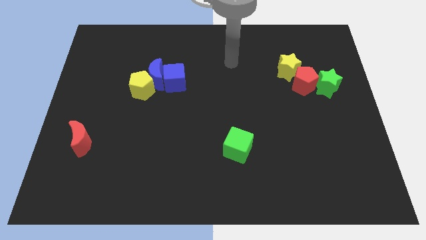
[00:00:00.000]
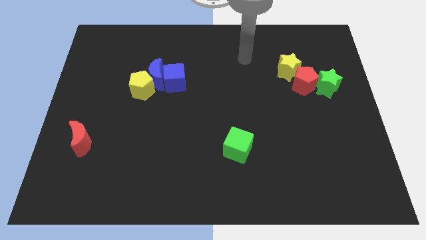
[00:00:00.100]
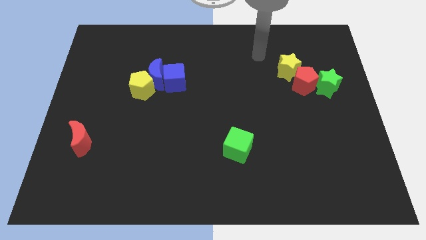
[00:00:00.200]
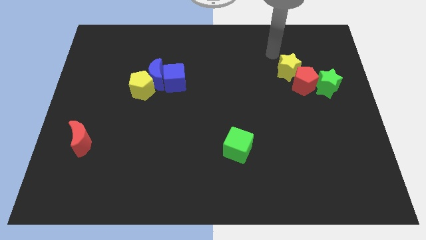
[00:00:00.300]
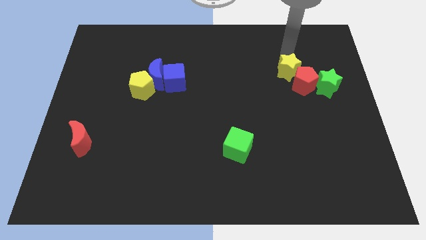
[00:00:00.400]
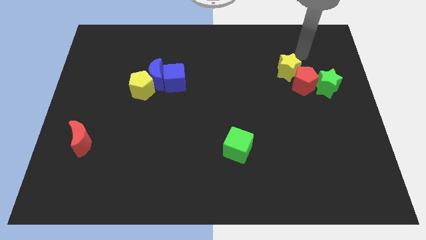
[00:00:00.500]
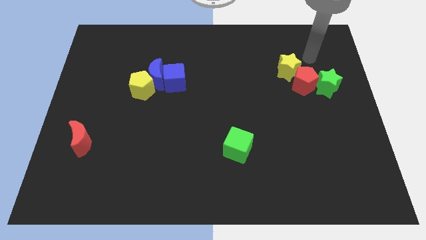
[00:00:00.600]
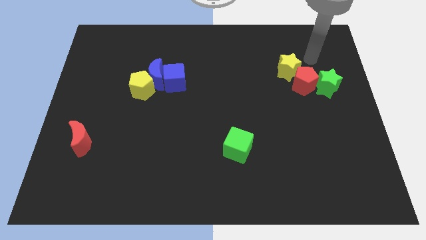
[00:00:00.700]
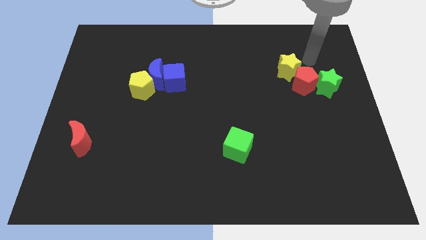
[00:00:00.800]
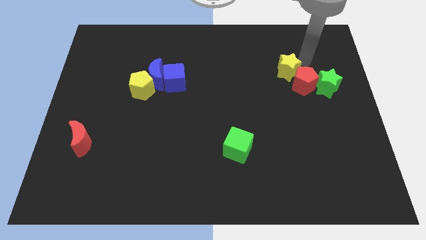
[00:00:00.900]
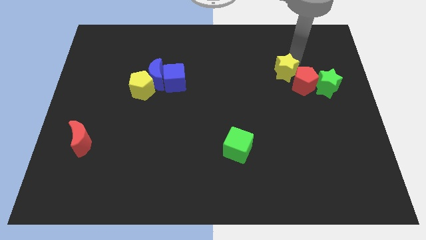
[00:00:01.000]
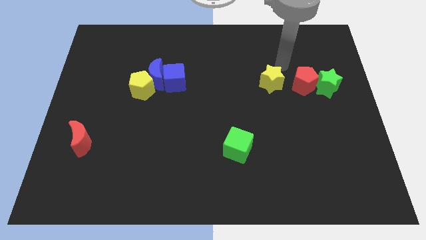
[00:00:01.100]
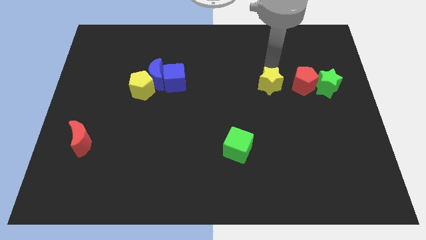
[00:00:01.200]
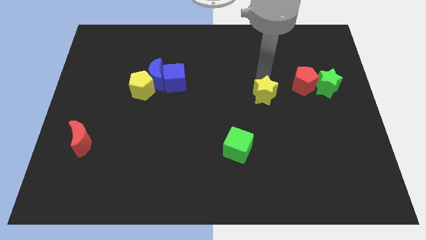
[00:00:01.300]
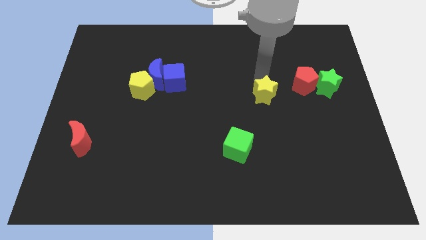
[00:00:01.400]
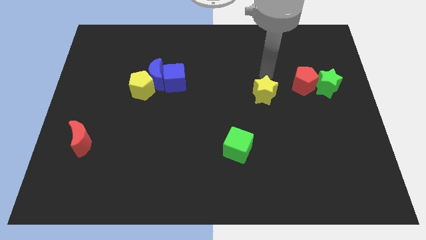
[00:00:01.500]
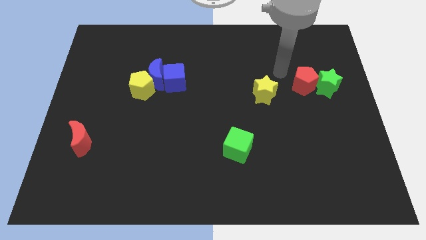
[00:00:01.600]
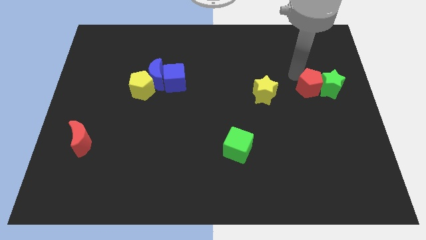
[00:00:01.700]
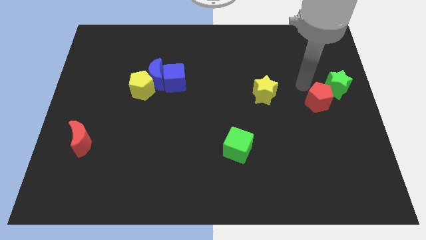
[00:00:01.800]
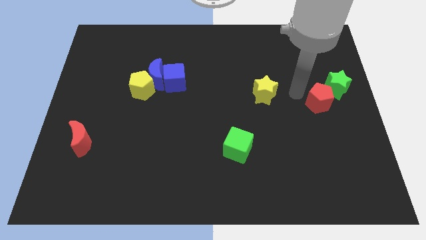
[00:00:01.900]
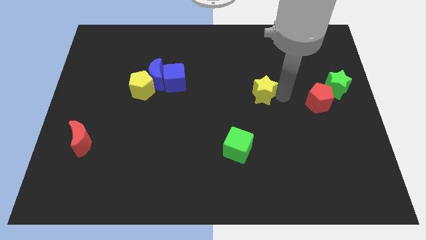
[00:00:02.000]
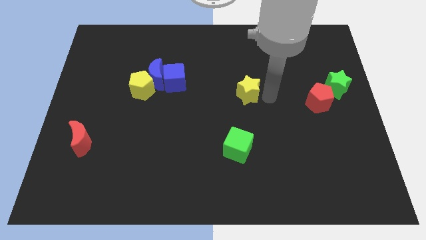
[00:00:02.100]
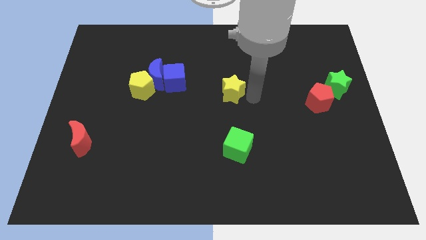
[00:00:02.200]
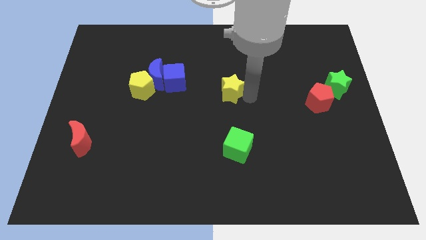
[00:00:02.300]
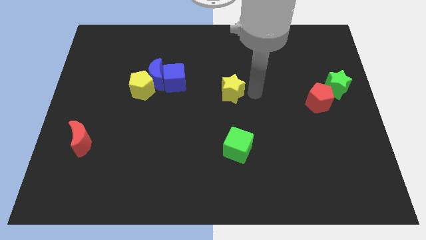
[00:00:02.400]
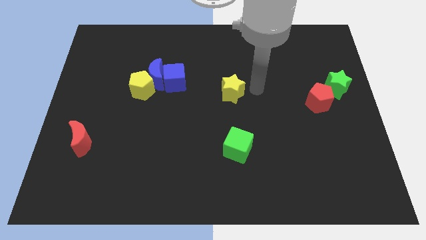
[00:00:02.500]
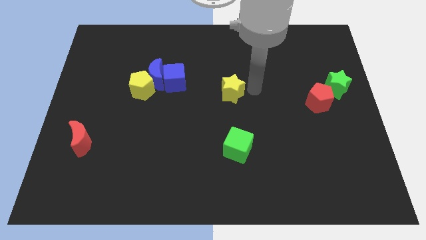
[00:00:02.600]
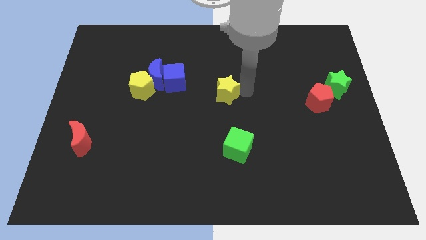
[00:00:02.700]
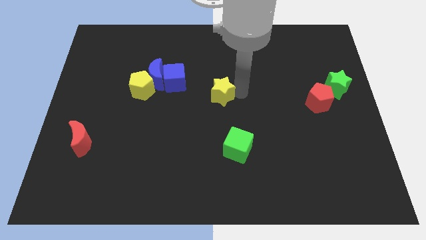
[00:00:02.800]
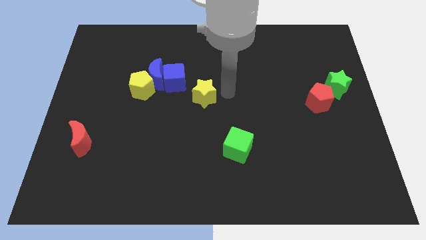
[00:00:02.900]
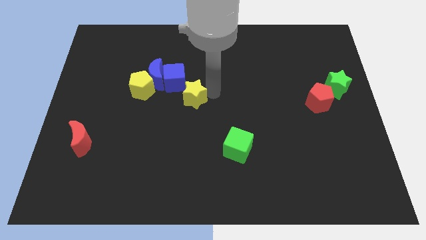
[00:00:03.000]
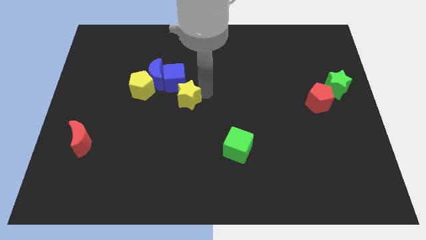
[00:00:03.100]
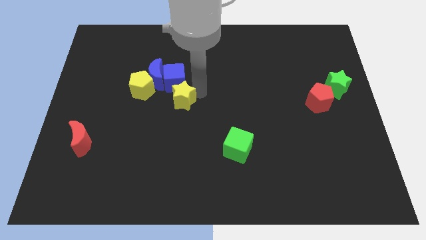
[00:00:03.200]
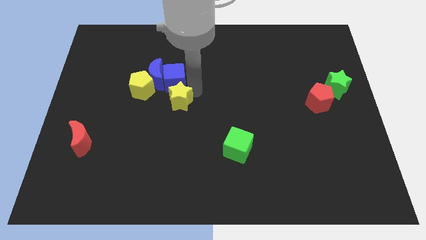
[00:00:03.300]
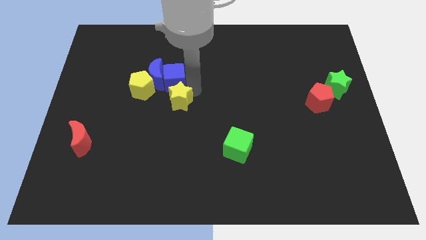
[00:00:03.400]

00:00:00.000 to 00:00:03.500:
separate yellow star and the red pentagon

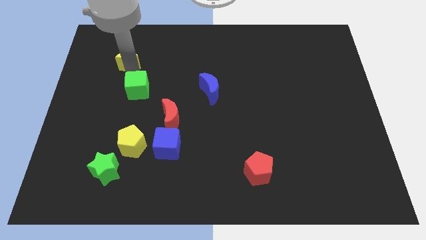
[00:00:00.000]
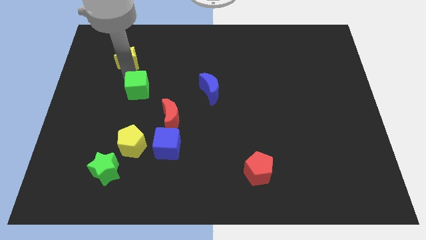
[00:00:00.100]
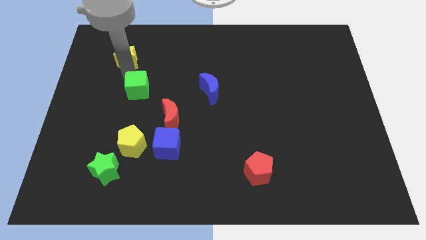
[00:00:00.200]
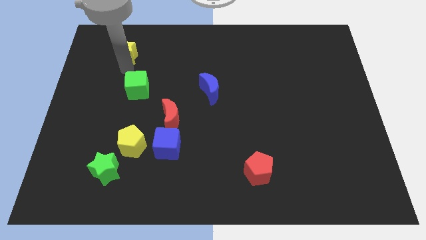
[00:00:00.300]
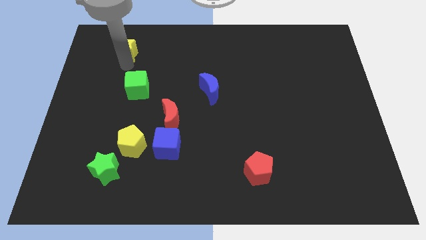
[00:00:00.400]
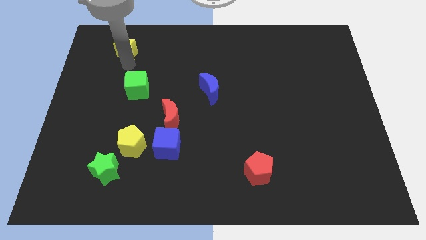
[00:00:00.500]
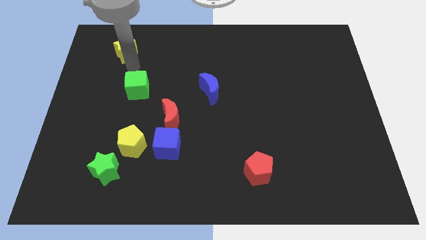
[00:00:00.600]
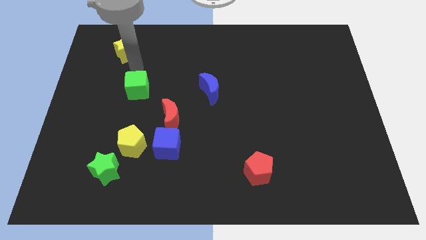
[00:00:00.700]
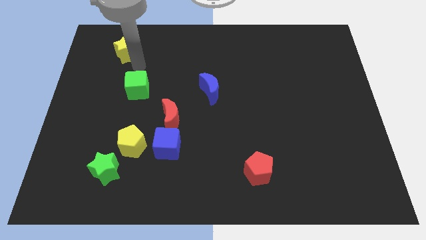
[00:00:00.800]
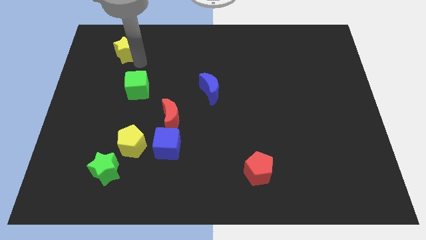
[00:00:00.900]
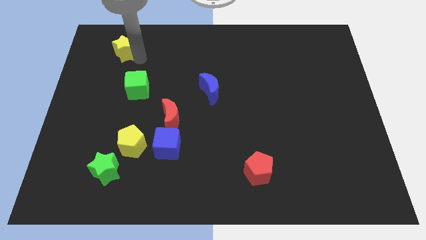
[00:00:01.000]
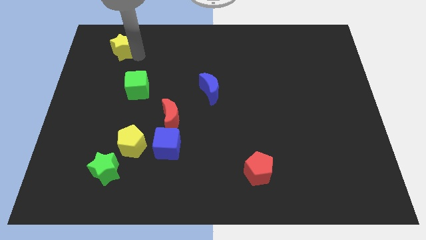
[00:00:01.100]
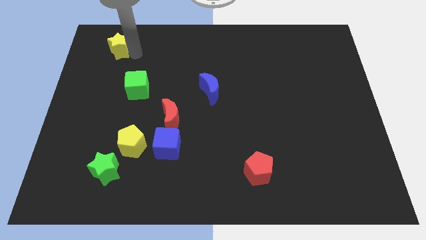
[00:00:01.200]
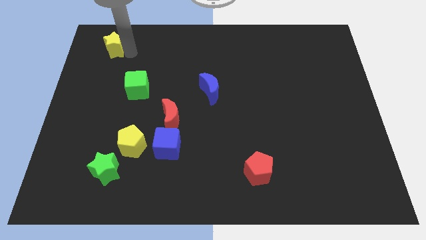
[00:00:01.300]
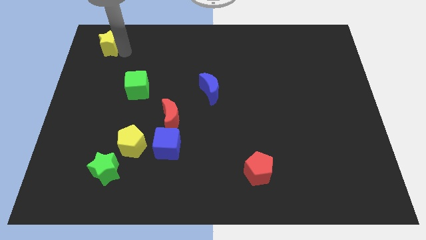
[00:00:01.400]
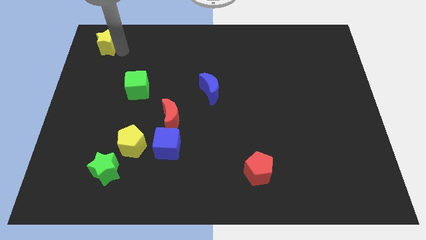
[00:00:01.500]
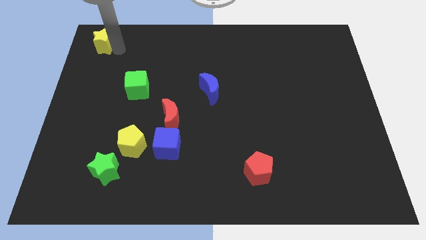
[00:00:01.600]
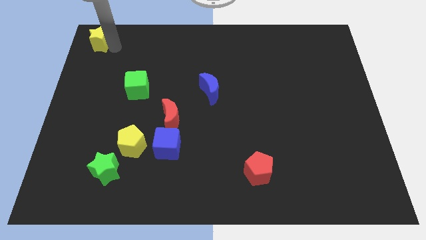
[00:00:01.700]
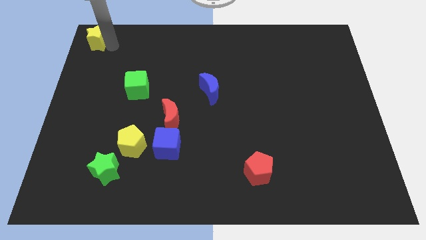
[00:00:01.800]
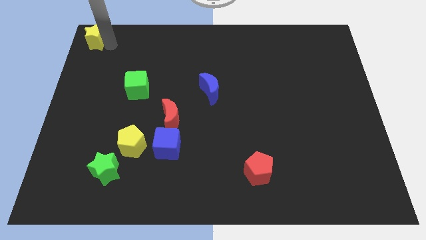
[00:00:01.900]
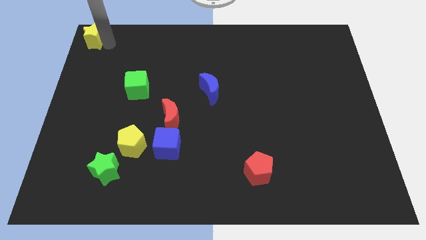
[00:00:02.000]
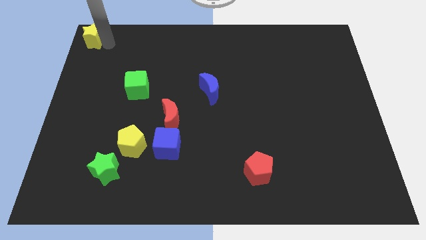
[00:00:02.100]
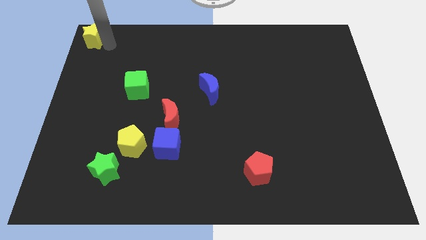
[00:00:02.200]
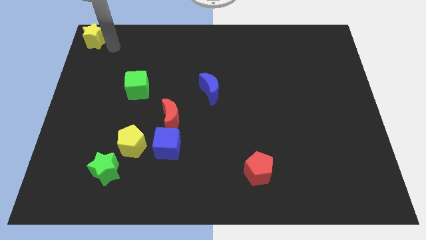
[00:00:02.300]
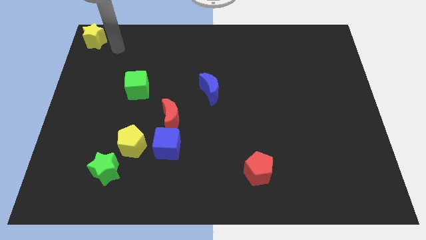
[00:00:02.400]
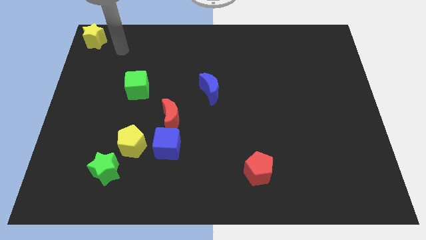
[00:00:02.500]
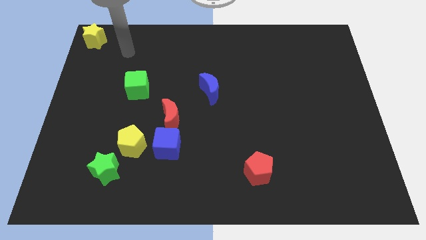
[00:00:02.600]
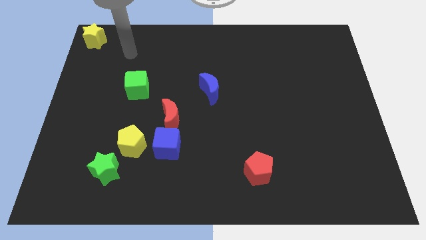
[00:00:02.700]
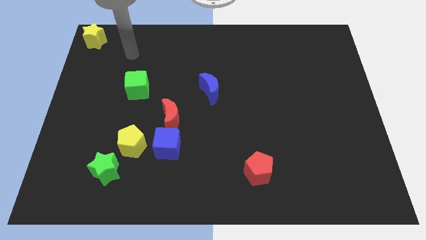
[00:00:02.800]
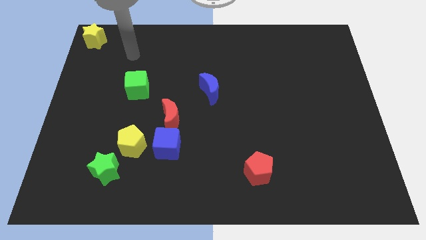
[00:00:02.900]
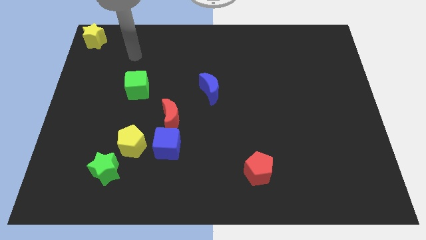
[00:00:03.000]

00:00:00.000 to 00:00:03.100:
move the yellow star to the top left corner of the board

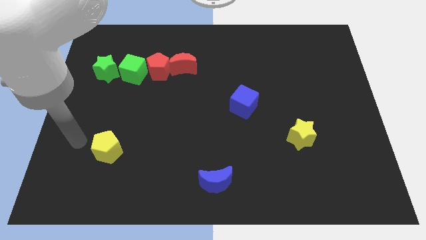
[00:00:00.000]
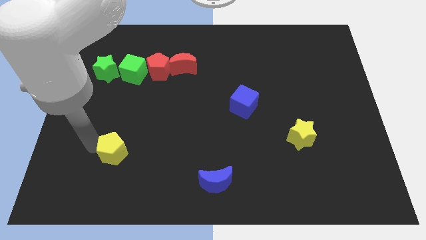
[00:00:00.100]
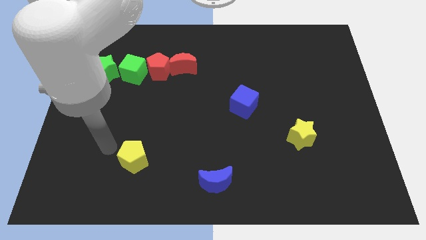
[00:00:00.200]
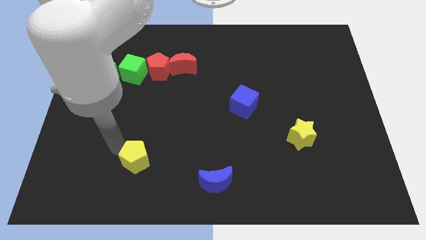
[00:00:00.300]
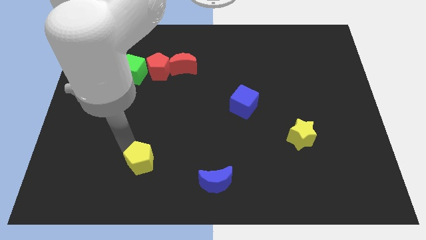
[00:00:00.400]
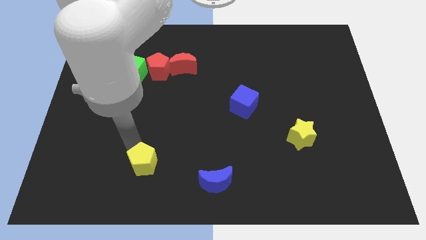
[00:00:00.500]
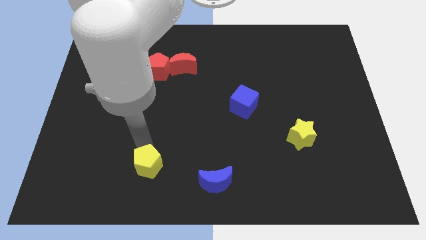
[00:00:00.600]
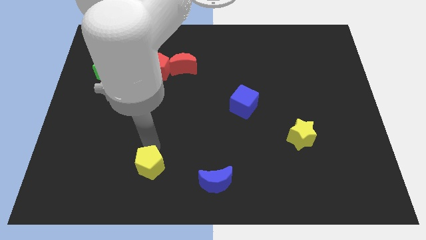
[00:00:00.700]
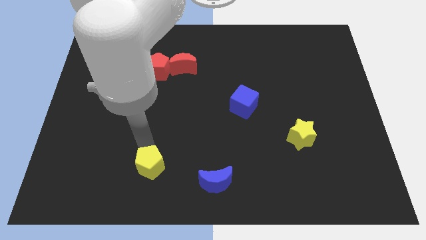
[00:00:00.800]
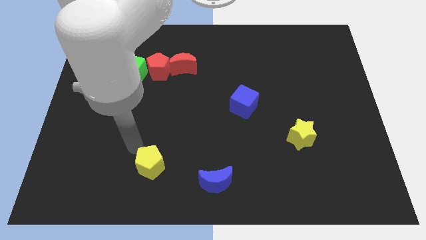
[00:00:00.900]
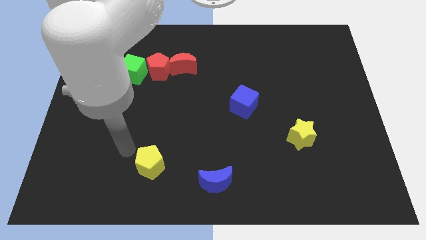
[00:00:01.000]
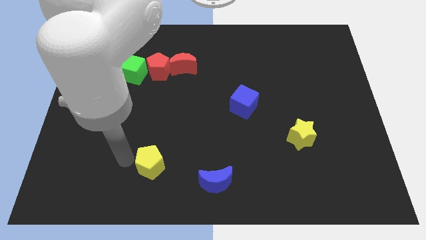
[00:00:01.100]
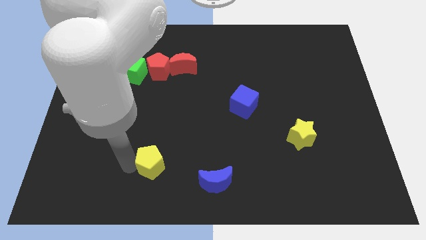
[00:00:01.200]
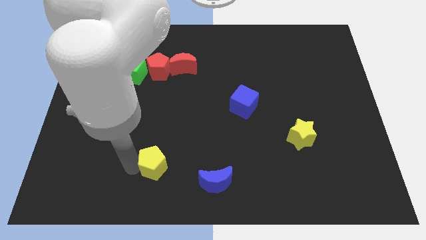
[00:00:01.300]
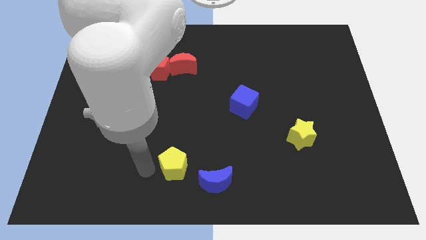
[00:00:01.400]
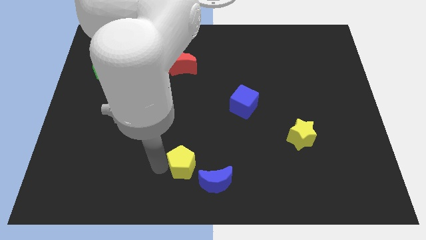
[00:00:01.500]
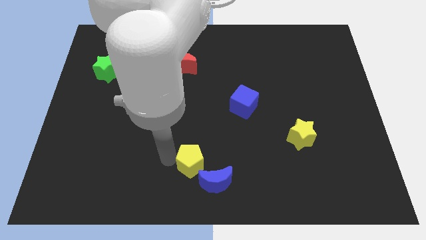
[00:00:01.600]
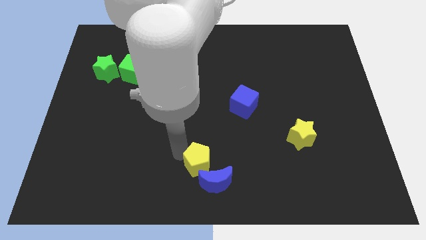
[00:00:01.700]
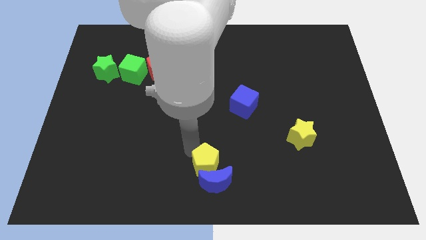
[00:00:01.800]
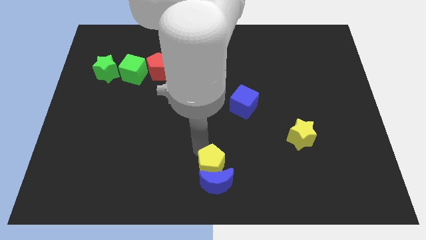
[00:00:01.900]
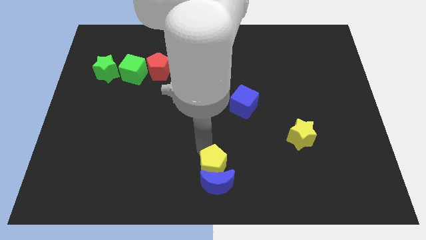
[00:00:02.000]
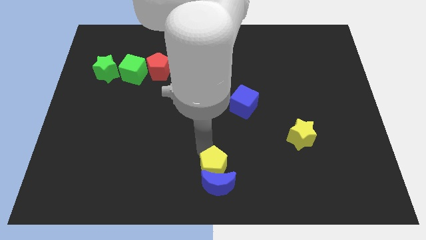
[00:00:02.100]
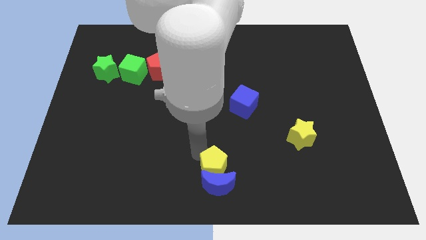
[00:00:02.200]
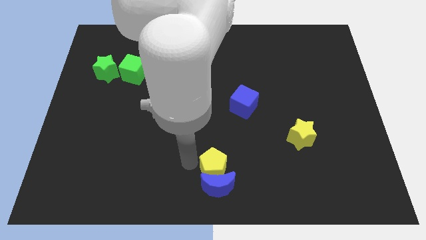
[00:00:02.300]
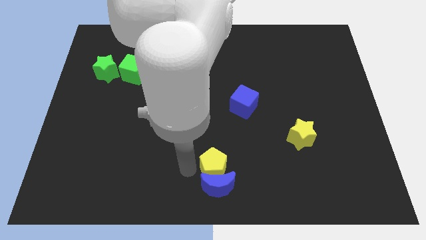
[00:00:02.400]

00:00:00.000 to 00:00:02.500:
move the yellow pentagon above the blue crescent
